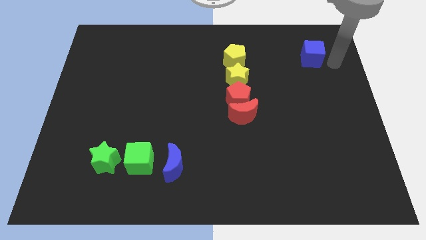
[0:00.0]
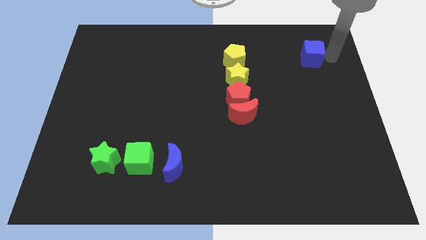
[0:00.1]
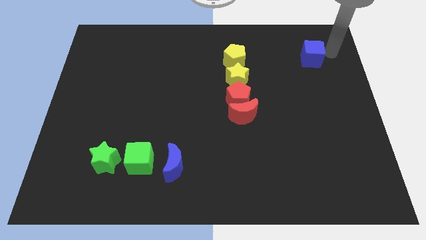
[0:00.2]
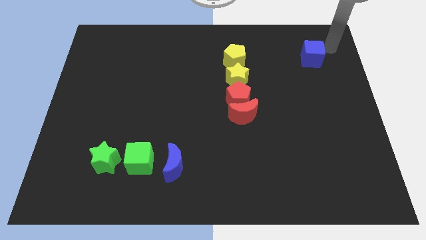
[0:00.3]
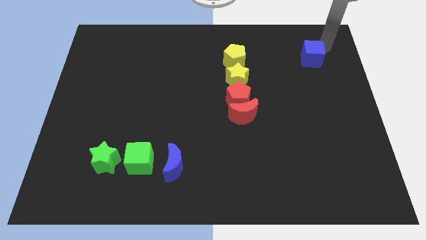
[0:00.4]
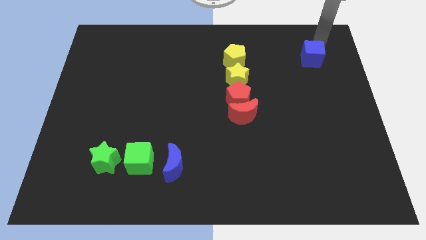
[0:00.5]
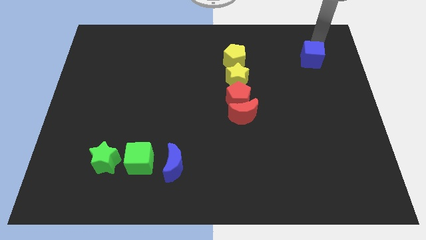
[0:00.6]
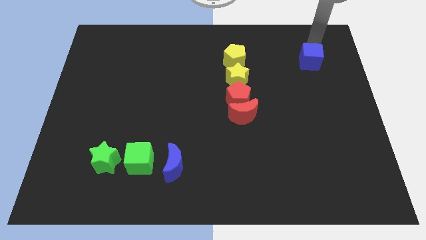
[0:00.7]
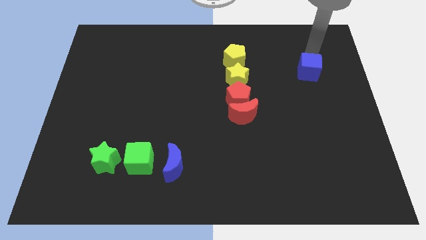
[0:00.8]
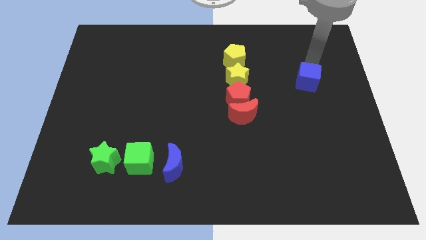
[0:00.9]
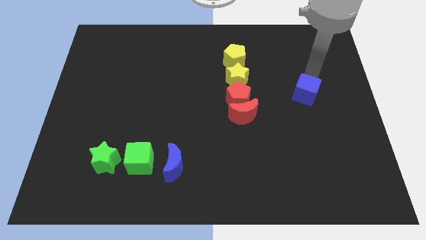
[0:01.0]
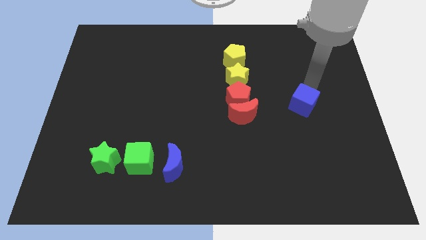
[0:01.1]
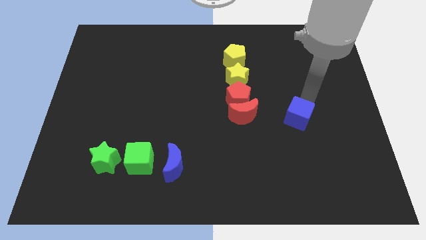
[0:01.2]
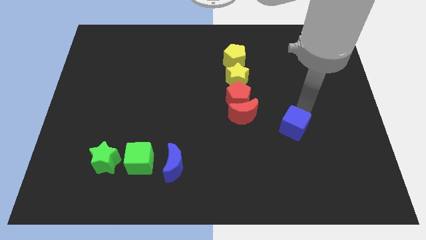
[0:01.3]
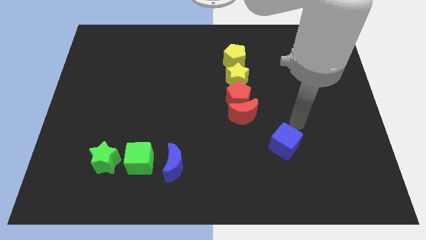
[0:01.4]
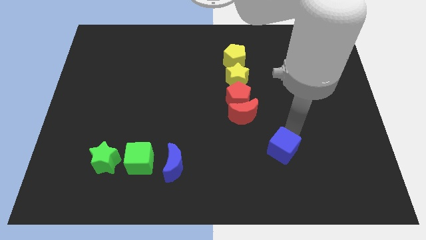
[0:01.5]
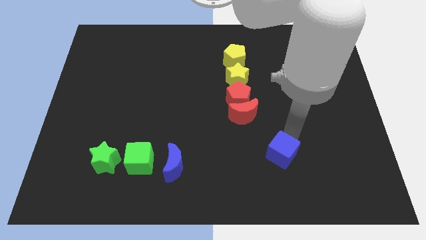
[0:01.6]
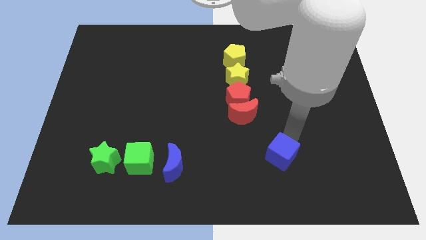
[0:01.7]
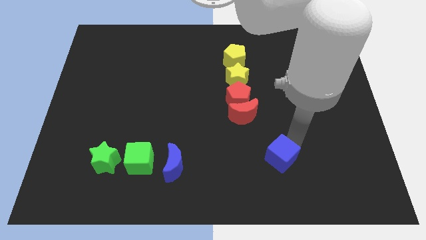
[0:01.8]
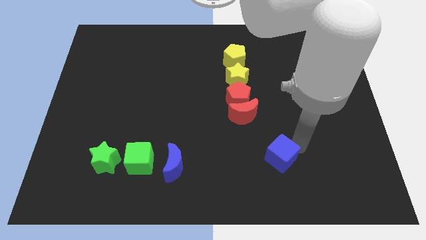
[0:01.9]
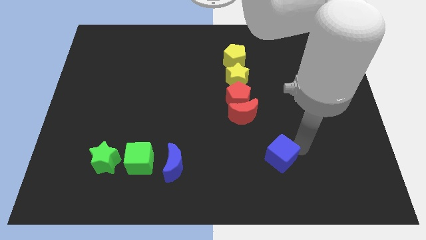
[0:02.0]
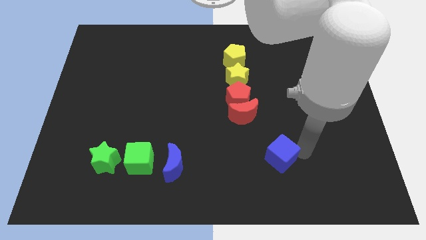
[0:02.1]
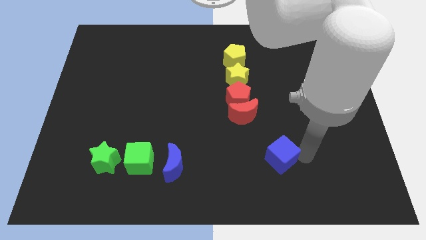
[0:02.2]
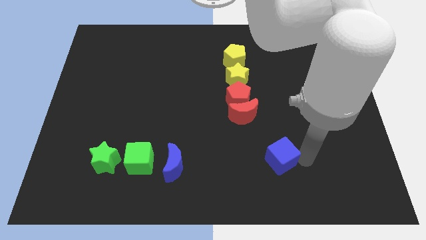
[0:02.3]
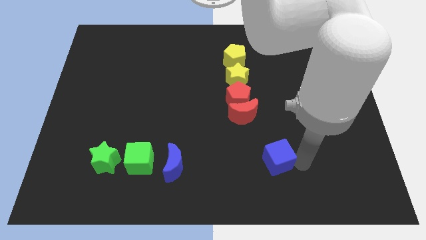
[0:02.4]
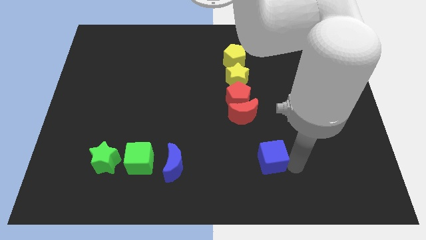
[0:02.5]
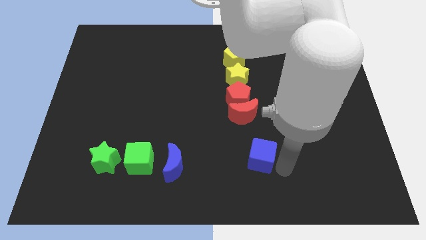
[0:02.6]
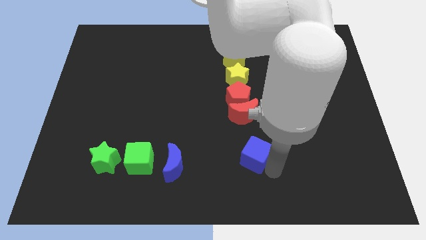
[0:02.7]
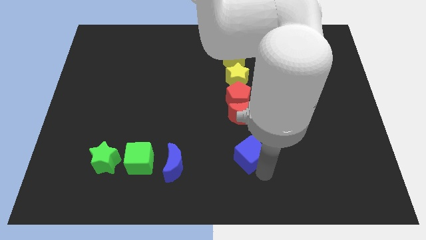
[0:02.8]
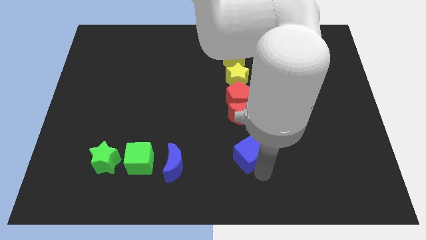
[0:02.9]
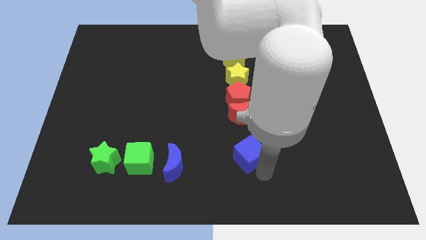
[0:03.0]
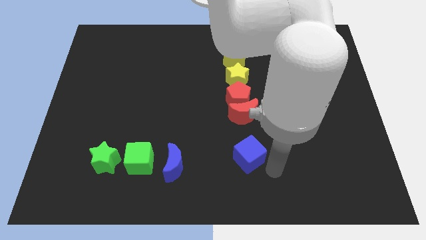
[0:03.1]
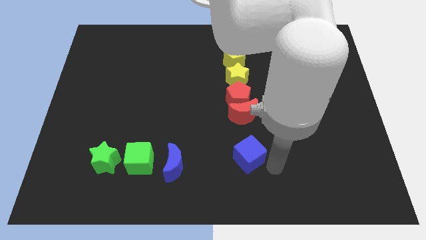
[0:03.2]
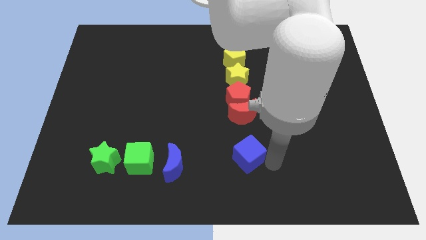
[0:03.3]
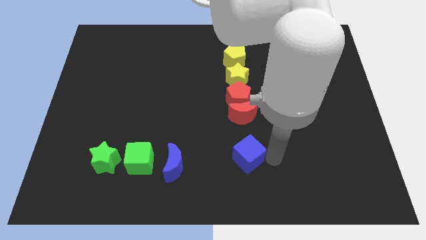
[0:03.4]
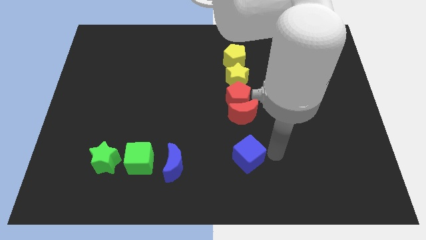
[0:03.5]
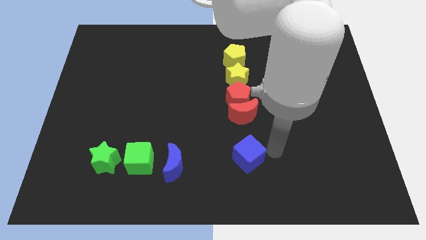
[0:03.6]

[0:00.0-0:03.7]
place the blue cube below the red moon

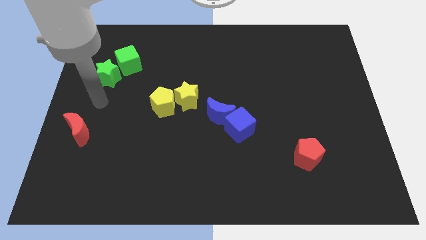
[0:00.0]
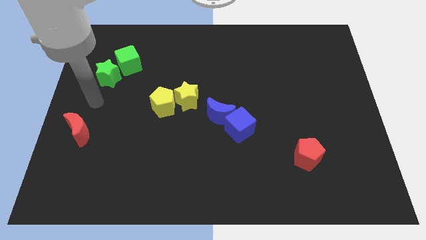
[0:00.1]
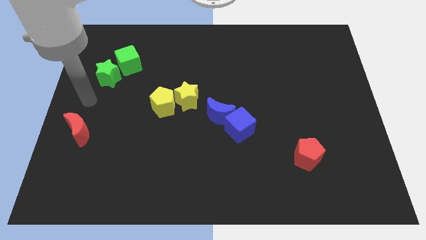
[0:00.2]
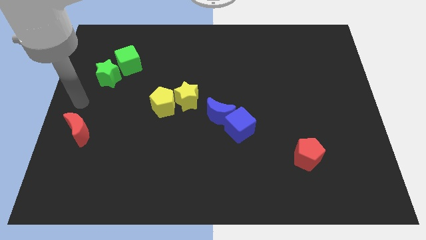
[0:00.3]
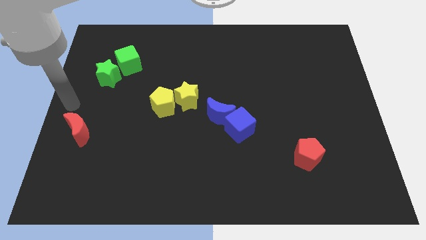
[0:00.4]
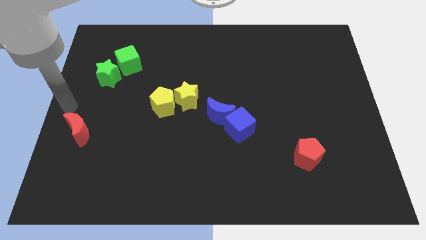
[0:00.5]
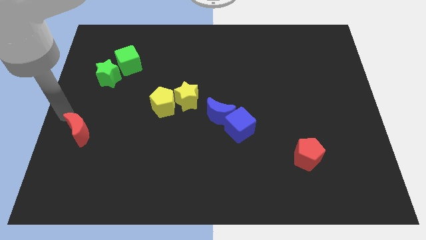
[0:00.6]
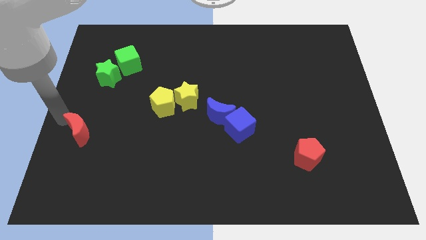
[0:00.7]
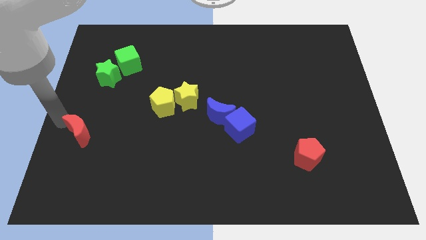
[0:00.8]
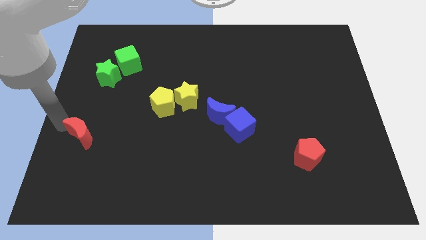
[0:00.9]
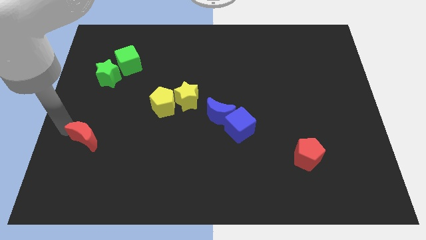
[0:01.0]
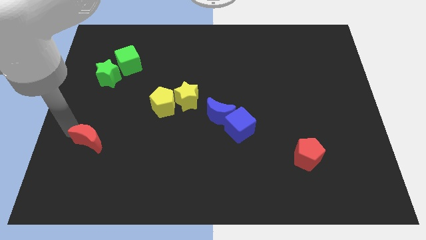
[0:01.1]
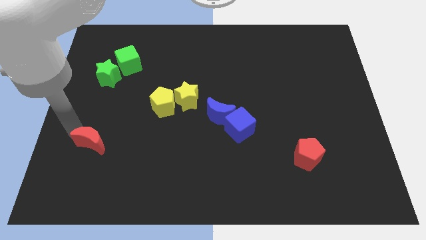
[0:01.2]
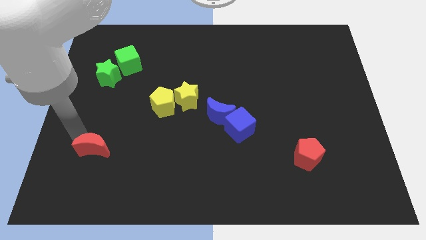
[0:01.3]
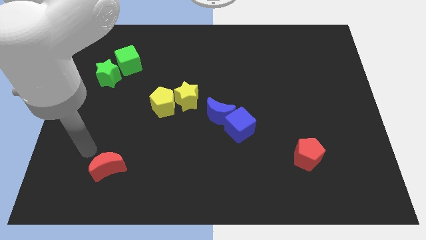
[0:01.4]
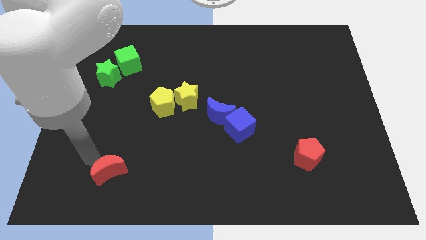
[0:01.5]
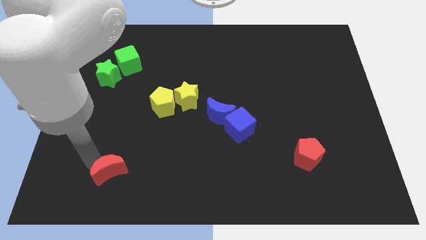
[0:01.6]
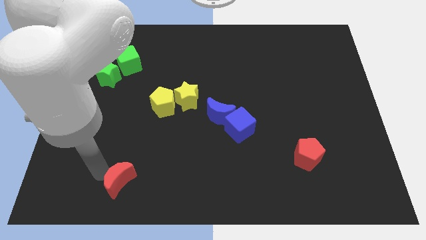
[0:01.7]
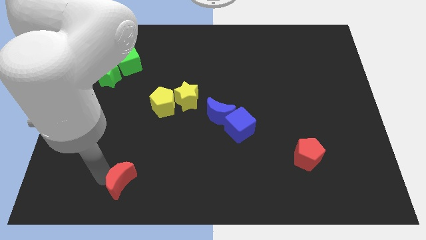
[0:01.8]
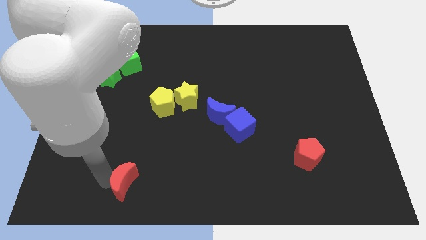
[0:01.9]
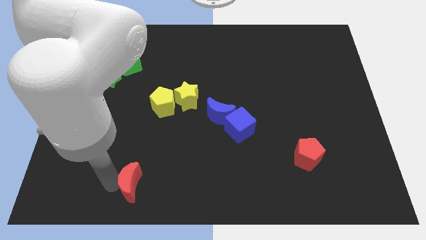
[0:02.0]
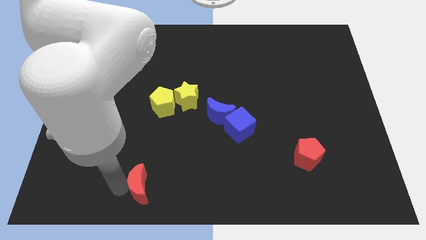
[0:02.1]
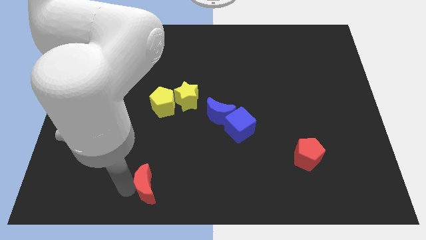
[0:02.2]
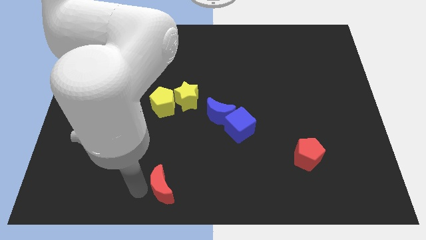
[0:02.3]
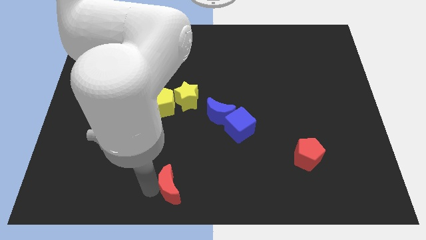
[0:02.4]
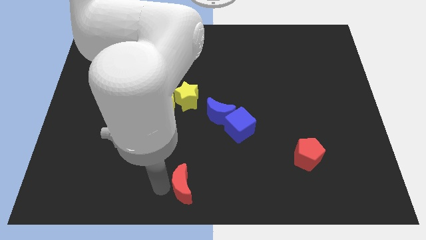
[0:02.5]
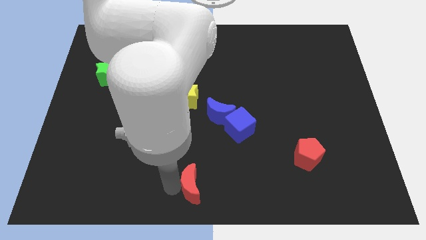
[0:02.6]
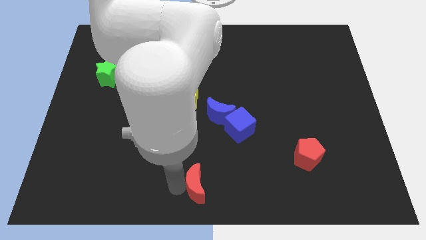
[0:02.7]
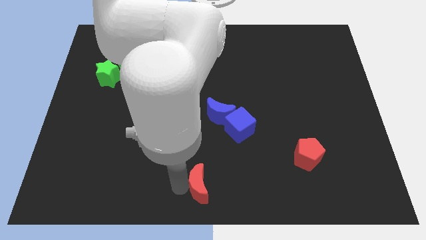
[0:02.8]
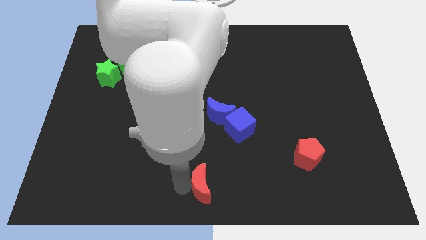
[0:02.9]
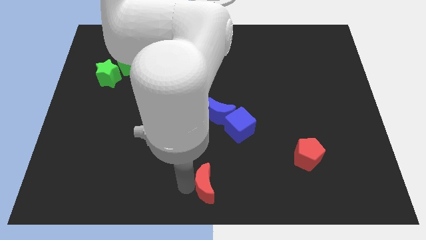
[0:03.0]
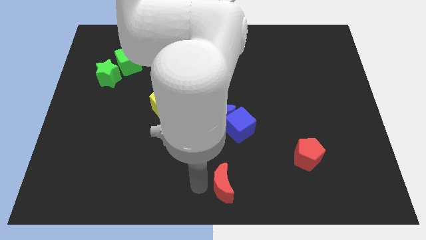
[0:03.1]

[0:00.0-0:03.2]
push red moon towards bottom center

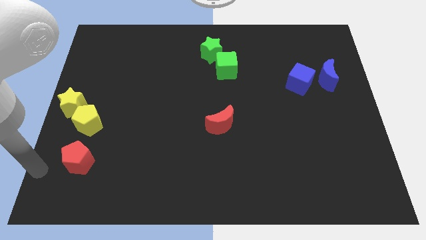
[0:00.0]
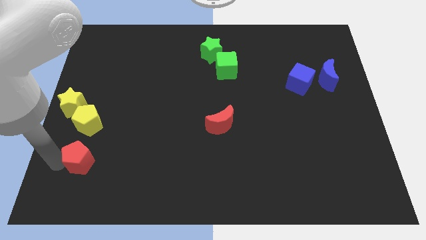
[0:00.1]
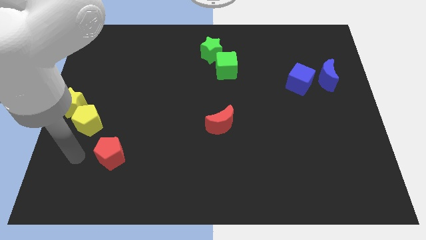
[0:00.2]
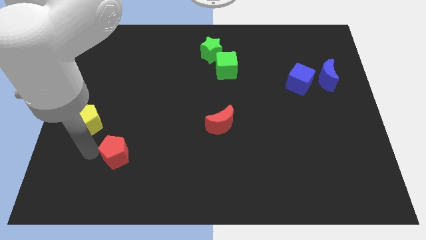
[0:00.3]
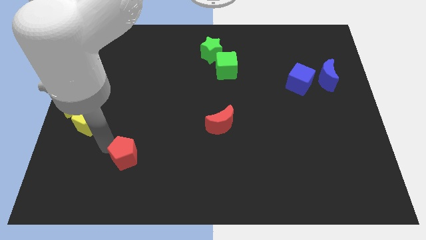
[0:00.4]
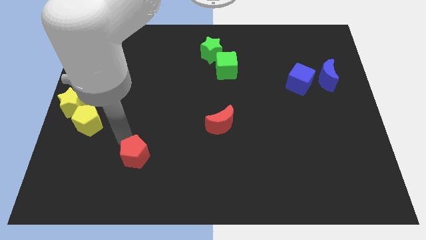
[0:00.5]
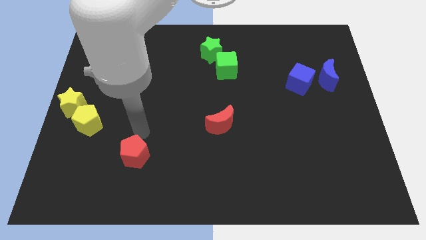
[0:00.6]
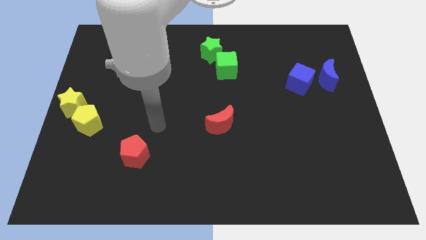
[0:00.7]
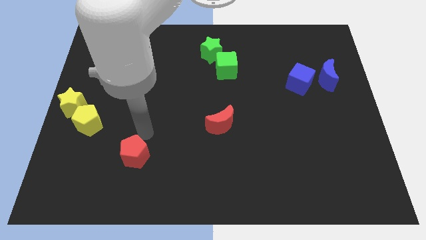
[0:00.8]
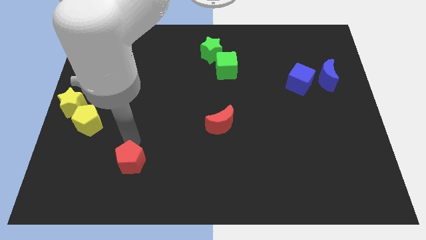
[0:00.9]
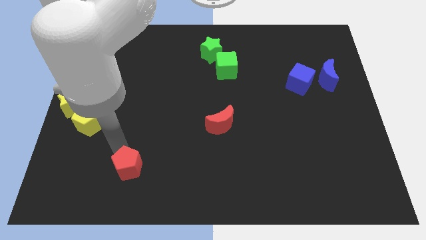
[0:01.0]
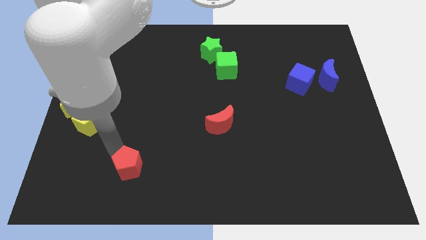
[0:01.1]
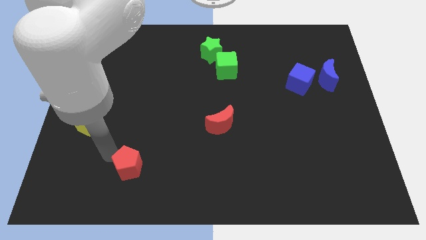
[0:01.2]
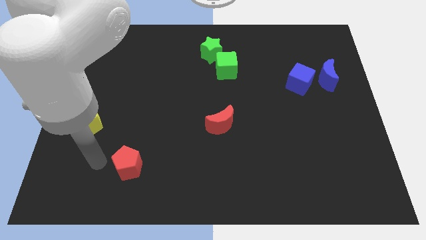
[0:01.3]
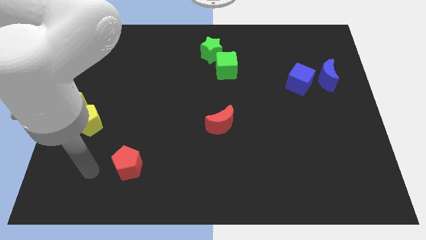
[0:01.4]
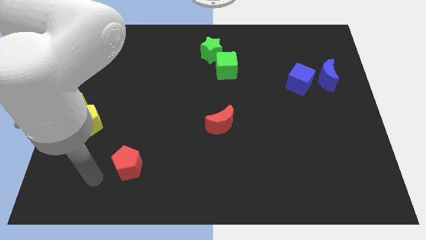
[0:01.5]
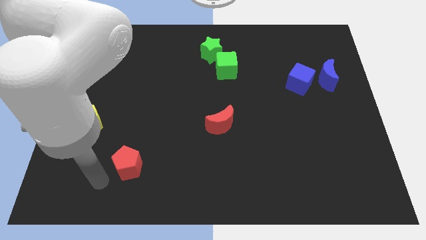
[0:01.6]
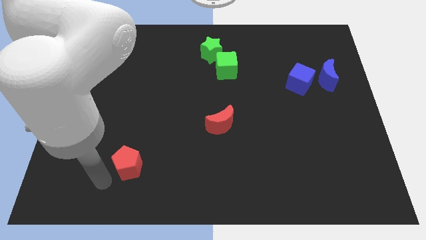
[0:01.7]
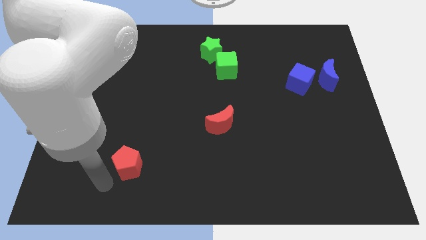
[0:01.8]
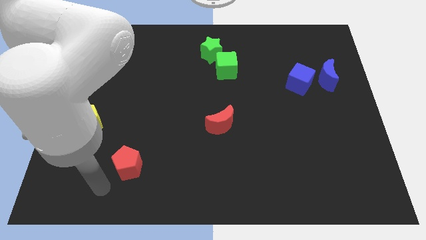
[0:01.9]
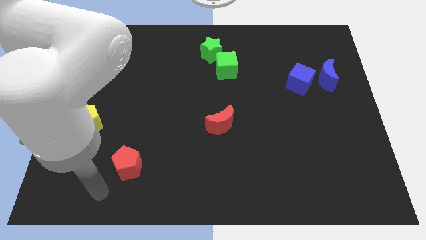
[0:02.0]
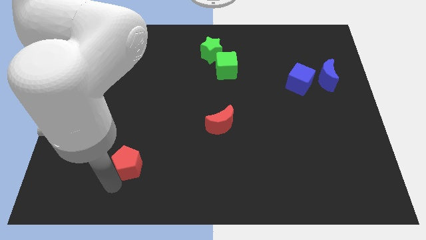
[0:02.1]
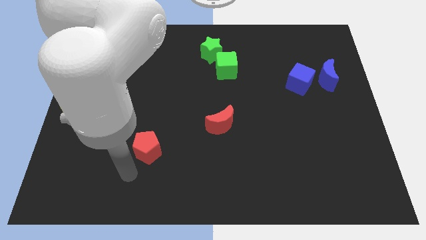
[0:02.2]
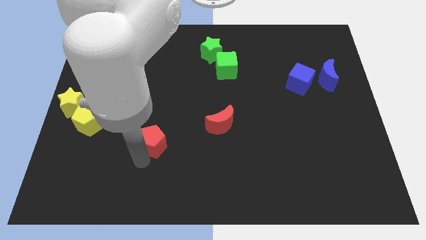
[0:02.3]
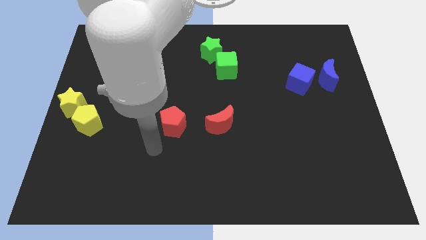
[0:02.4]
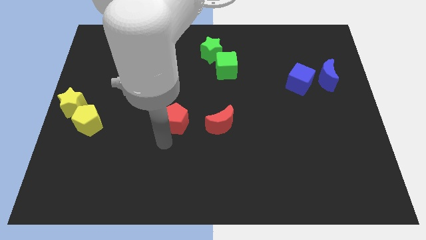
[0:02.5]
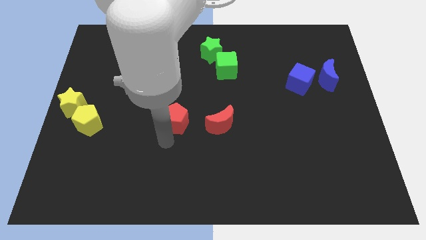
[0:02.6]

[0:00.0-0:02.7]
place the red pentagon left to the red crescent
